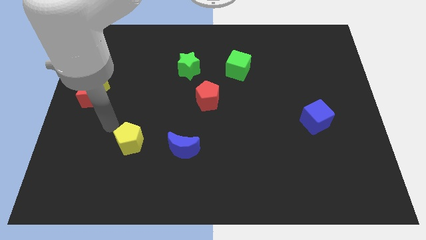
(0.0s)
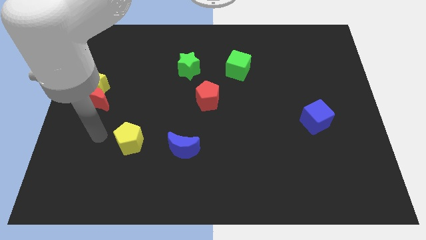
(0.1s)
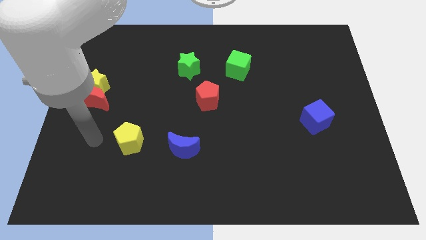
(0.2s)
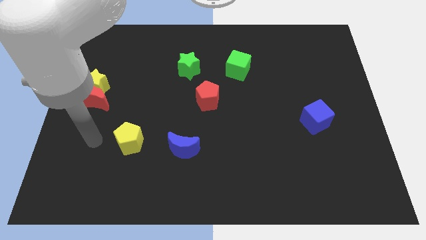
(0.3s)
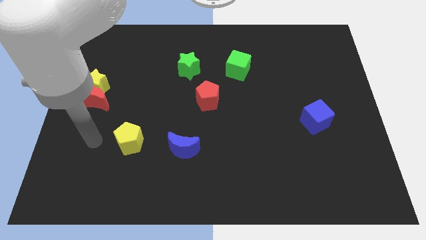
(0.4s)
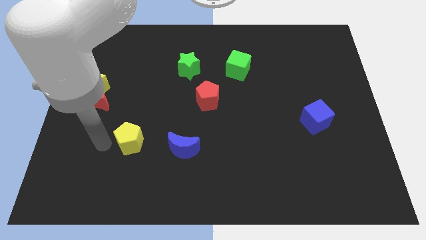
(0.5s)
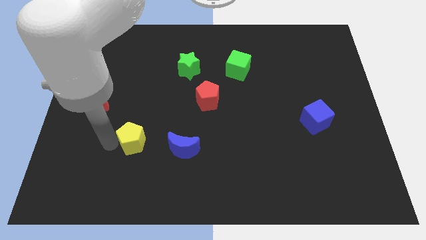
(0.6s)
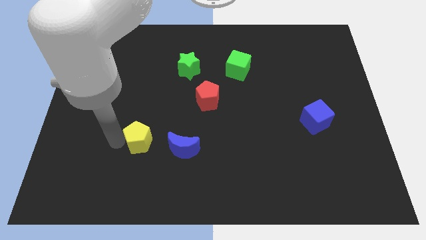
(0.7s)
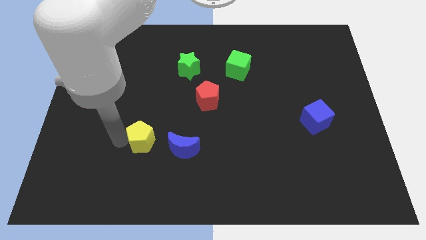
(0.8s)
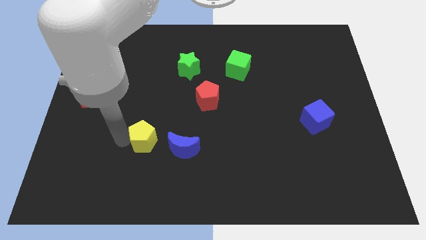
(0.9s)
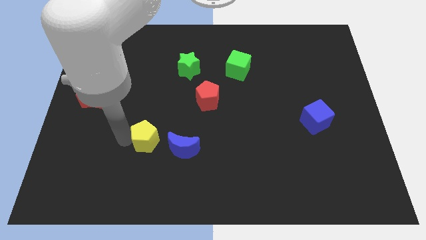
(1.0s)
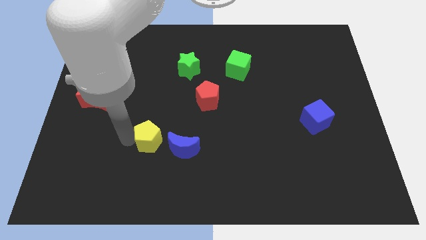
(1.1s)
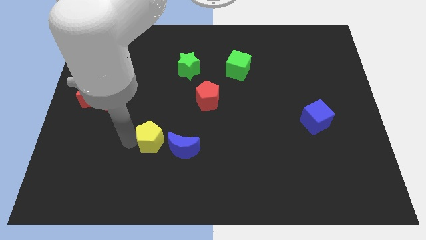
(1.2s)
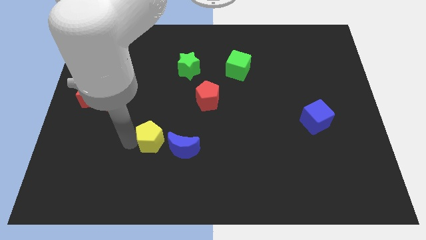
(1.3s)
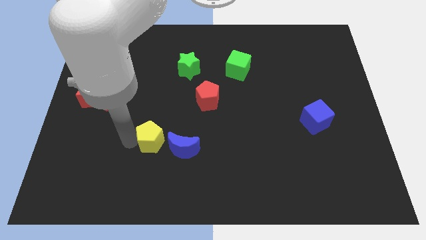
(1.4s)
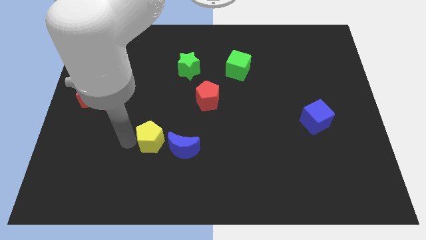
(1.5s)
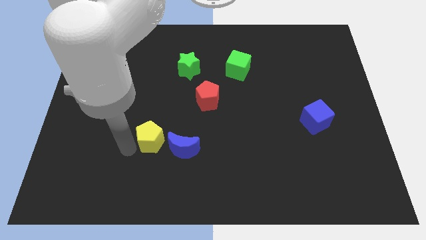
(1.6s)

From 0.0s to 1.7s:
slide the yellow pentagon to the left side of the blue moon

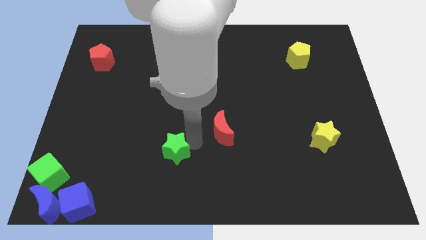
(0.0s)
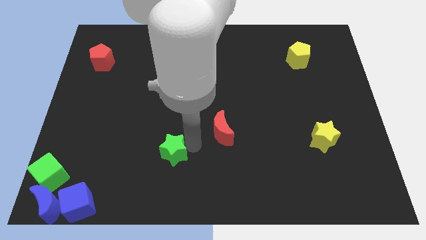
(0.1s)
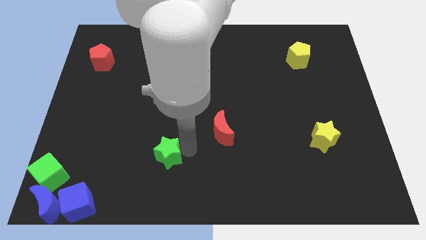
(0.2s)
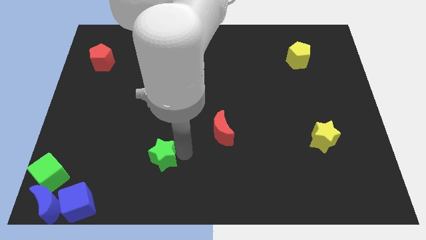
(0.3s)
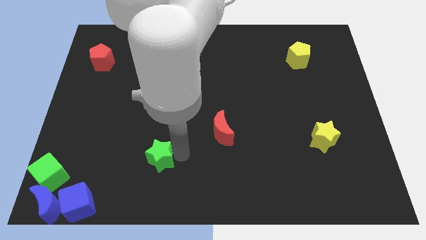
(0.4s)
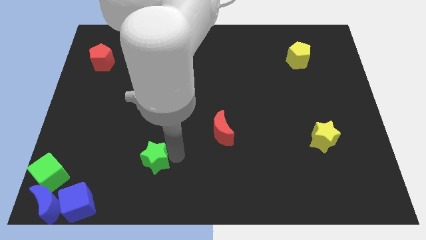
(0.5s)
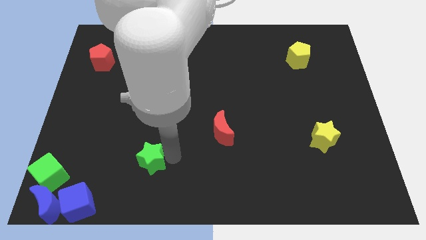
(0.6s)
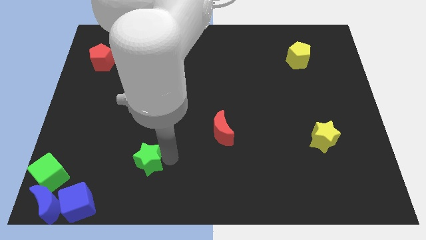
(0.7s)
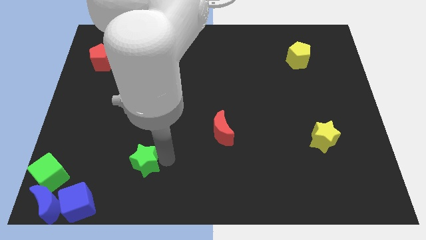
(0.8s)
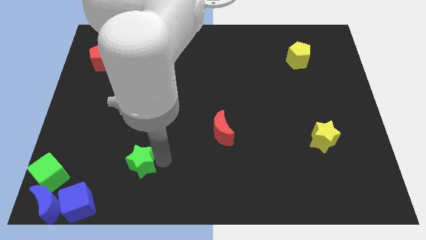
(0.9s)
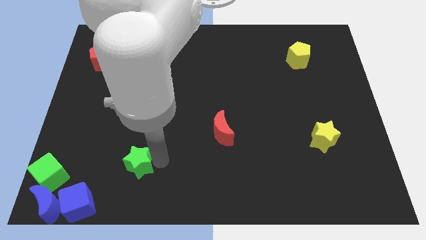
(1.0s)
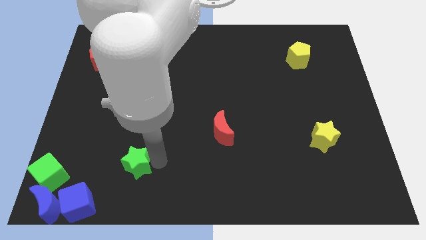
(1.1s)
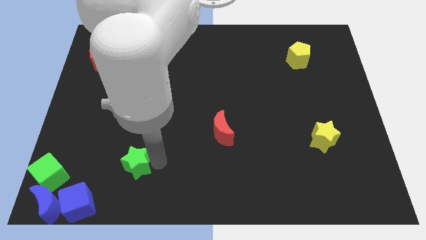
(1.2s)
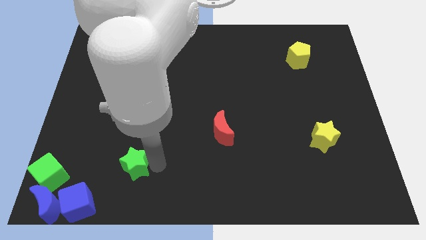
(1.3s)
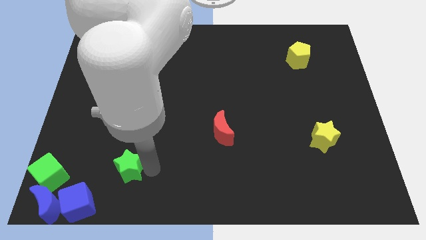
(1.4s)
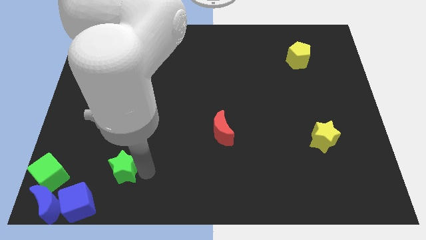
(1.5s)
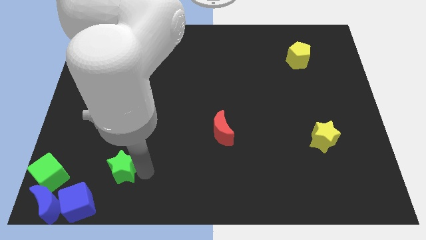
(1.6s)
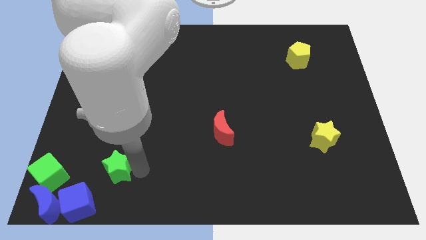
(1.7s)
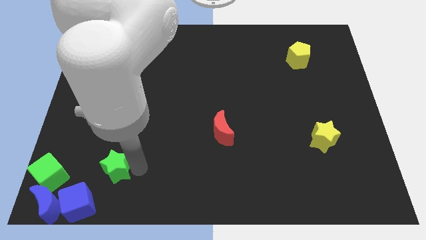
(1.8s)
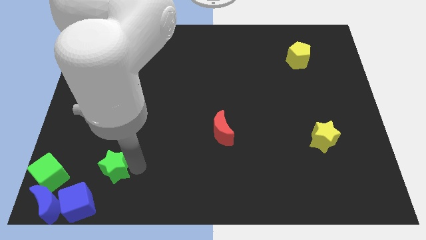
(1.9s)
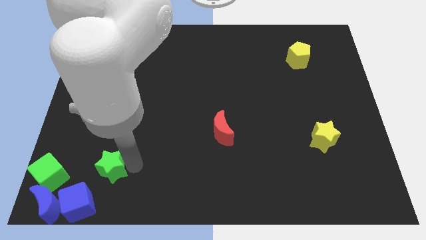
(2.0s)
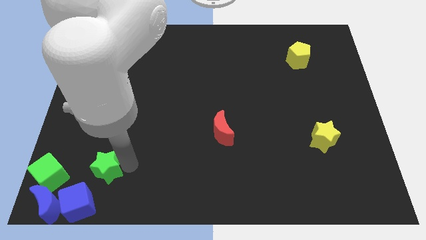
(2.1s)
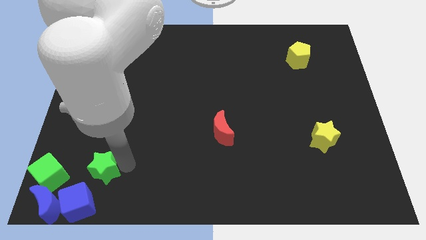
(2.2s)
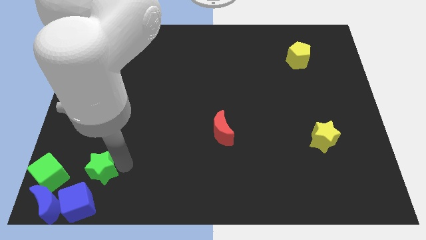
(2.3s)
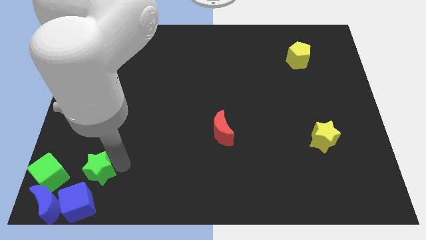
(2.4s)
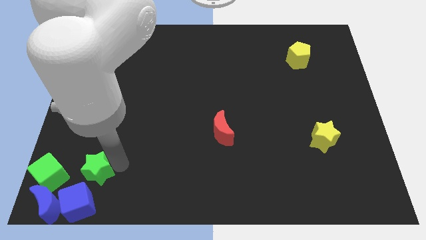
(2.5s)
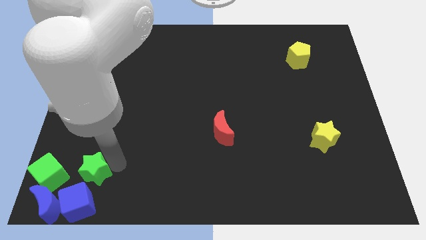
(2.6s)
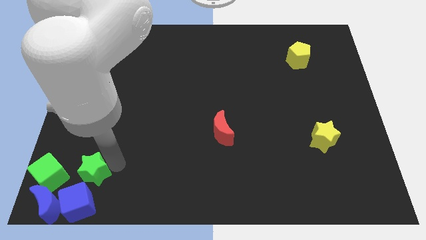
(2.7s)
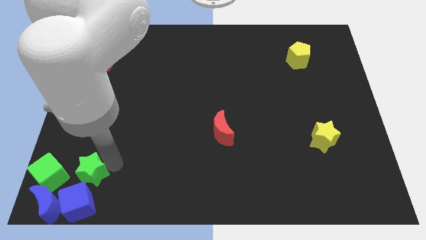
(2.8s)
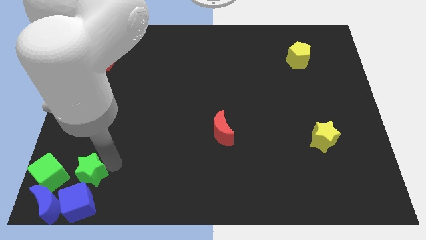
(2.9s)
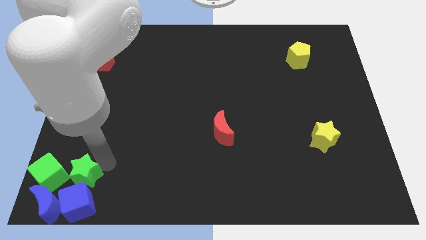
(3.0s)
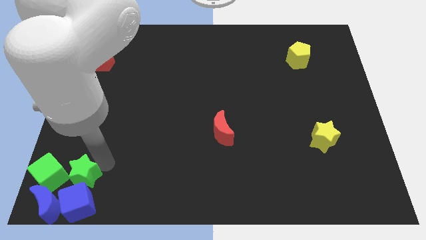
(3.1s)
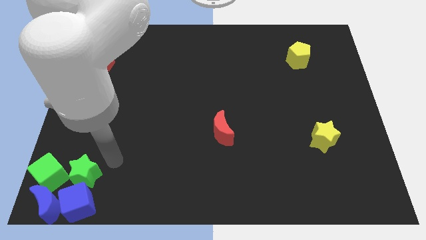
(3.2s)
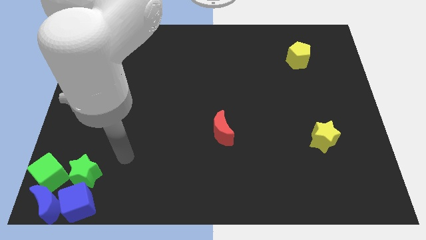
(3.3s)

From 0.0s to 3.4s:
place green star above the blue cube

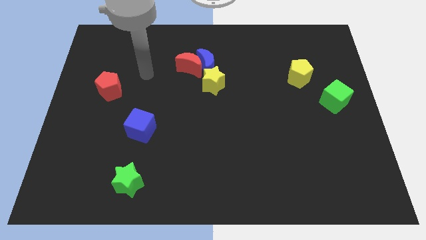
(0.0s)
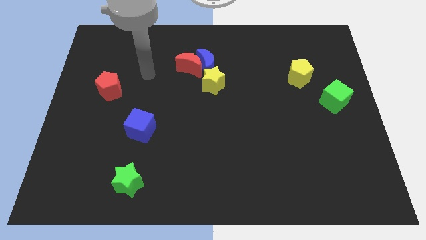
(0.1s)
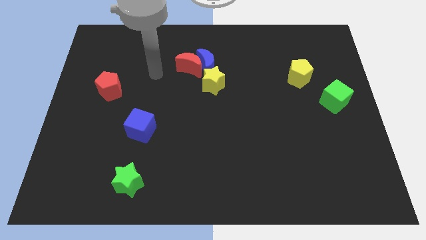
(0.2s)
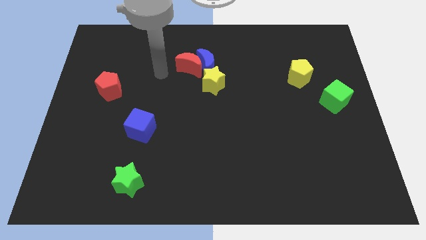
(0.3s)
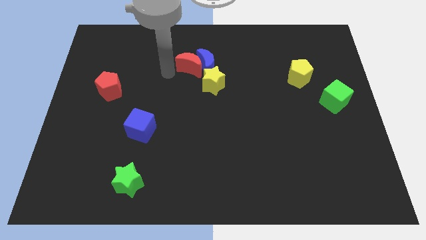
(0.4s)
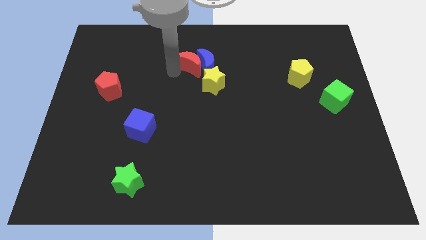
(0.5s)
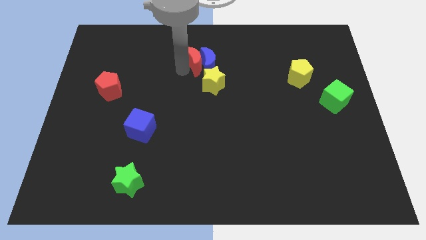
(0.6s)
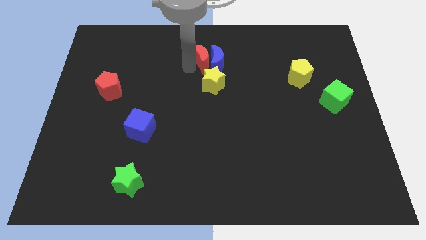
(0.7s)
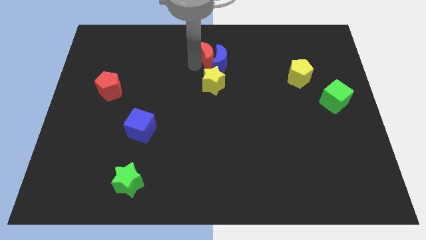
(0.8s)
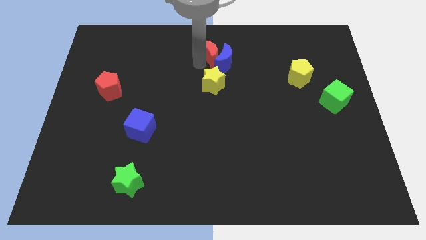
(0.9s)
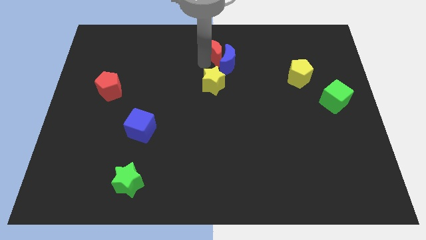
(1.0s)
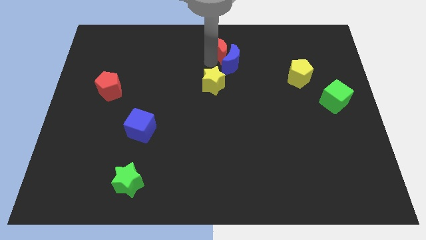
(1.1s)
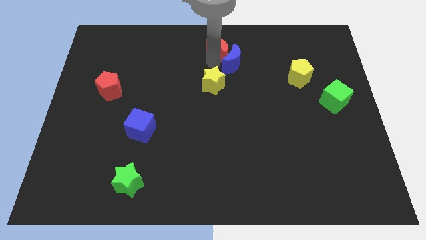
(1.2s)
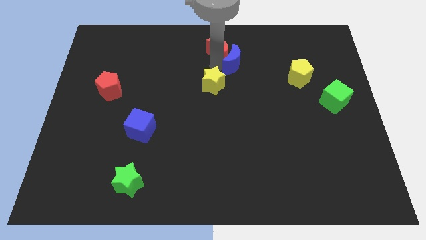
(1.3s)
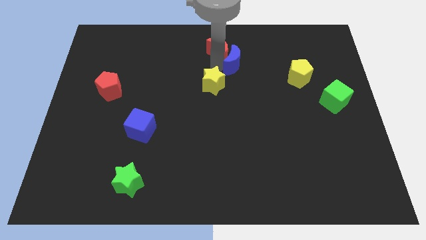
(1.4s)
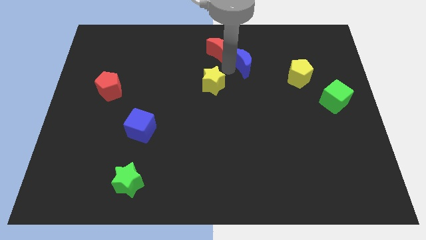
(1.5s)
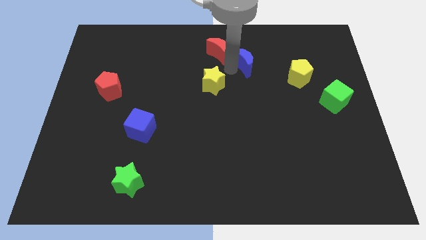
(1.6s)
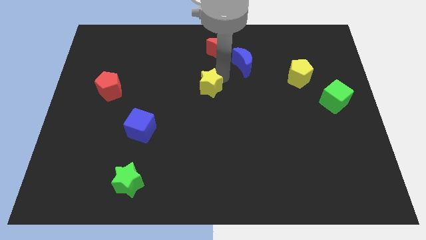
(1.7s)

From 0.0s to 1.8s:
place red moon to the top of yellow star

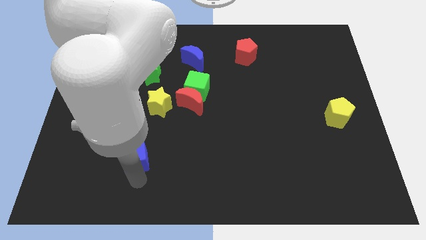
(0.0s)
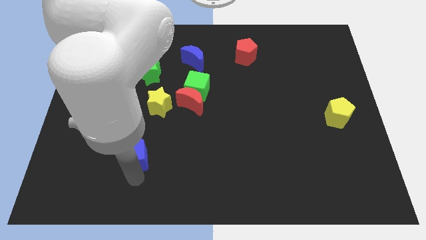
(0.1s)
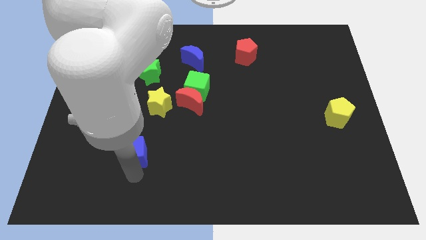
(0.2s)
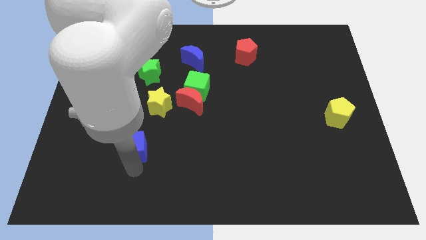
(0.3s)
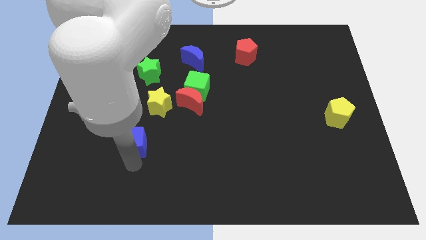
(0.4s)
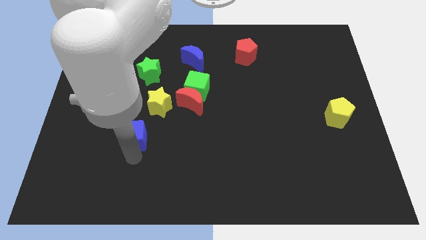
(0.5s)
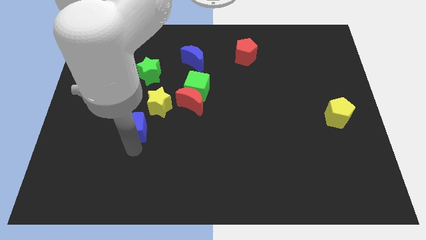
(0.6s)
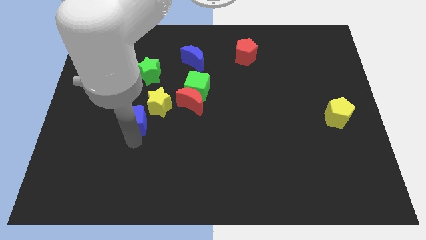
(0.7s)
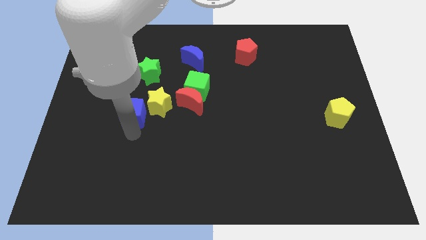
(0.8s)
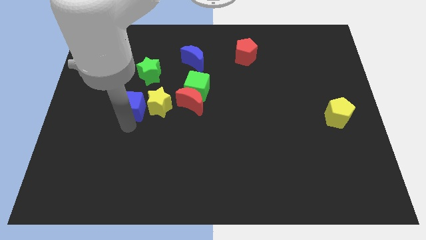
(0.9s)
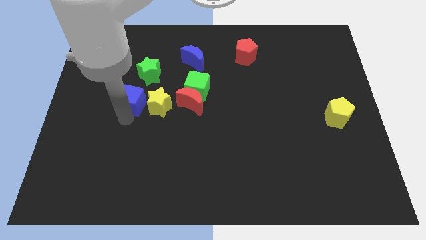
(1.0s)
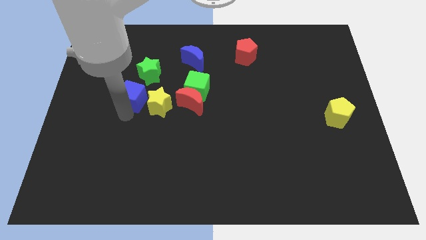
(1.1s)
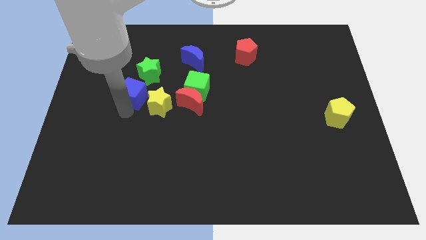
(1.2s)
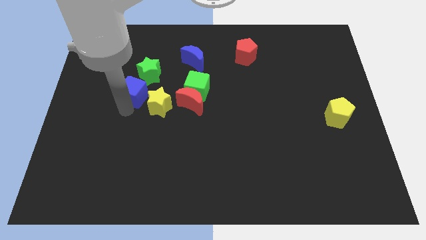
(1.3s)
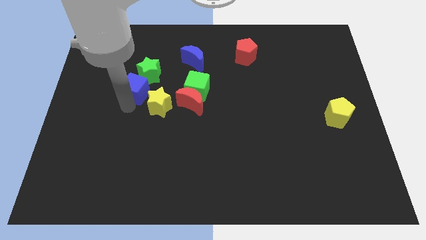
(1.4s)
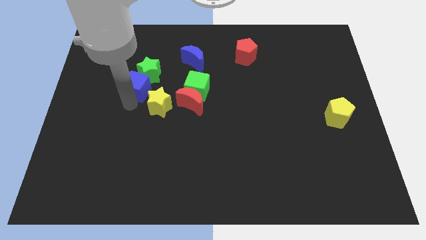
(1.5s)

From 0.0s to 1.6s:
push blue block towards the green star

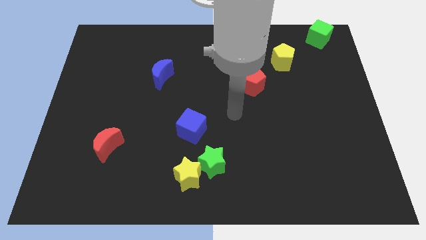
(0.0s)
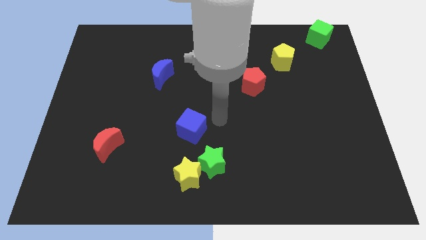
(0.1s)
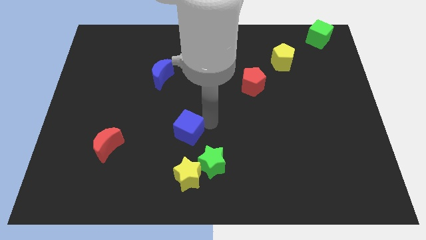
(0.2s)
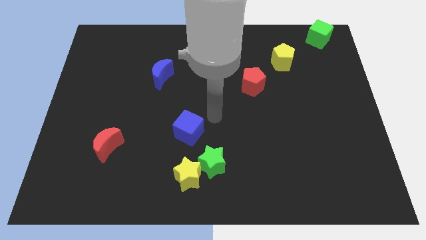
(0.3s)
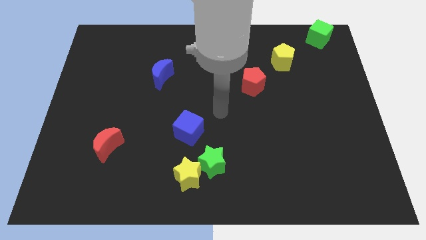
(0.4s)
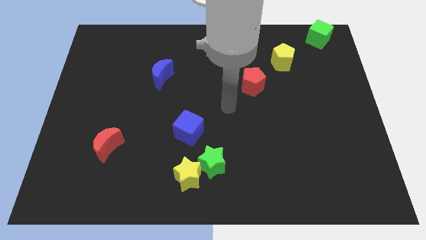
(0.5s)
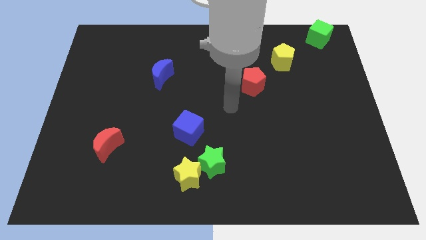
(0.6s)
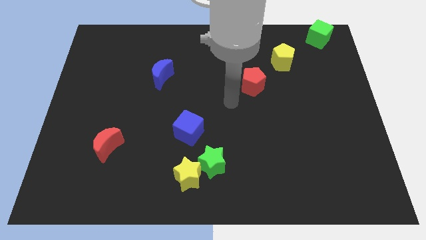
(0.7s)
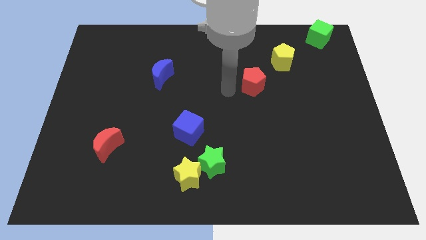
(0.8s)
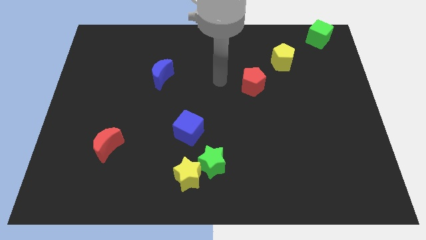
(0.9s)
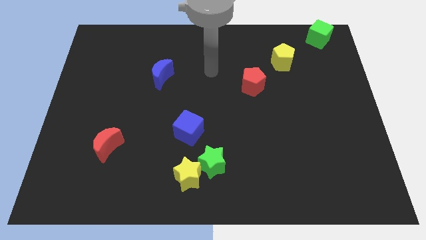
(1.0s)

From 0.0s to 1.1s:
slightly push the blue cube
